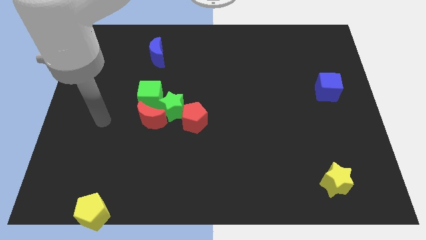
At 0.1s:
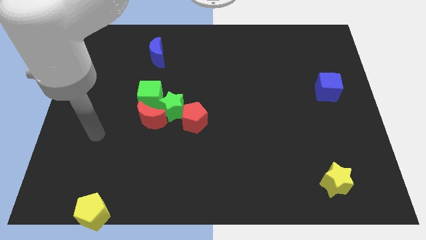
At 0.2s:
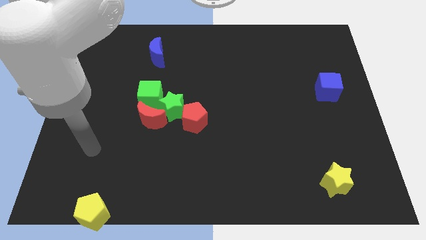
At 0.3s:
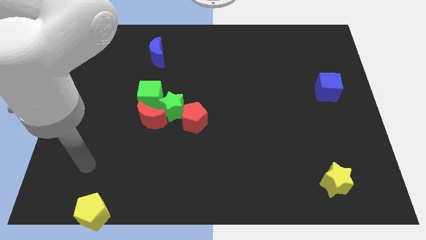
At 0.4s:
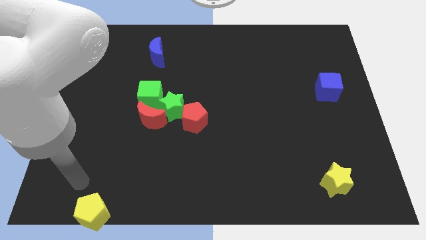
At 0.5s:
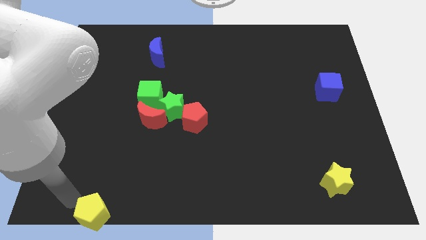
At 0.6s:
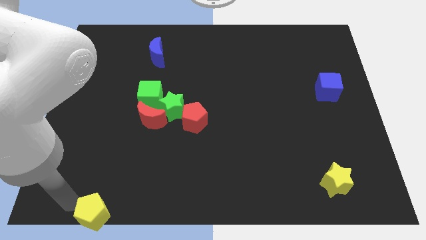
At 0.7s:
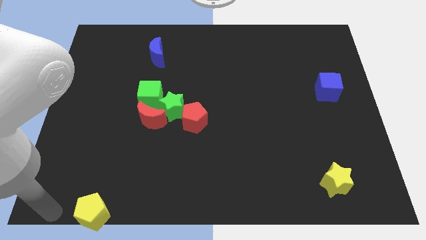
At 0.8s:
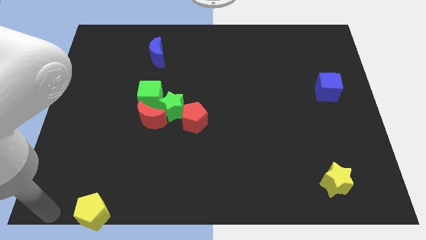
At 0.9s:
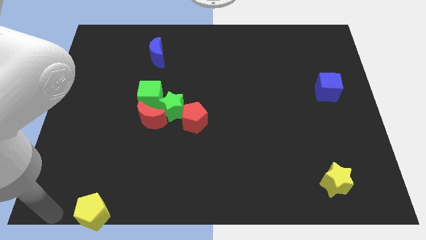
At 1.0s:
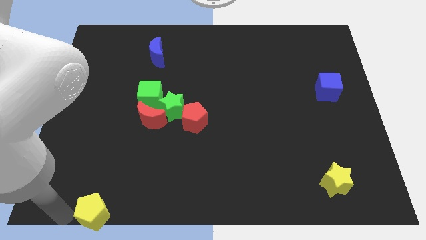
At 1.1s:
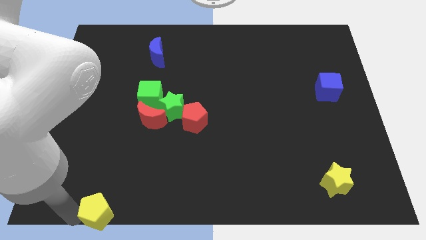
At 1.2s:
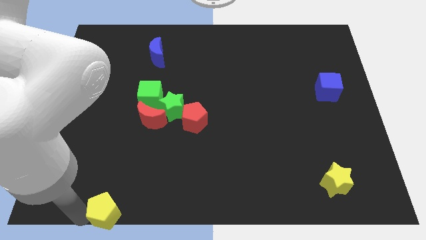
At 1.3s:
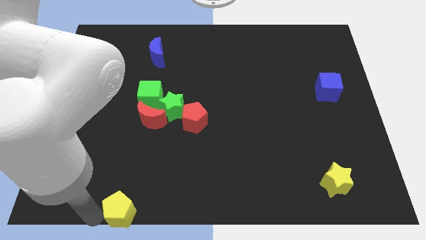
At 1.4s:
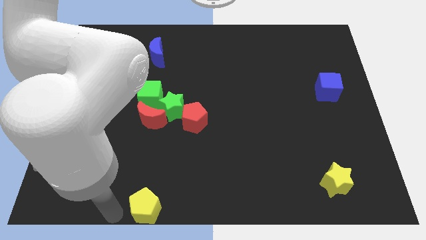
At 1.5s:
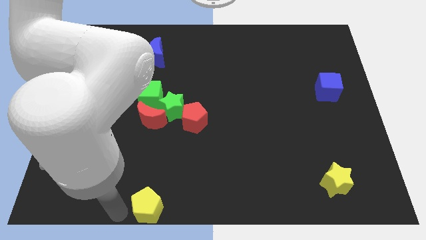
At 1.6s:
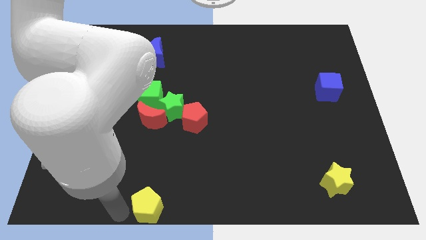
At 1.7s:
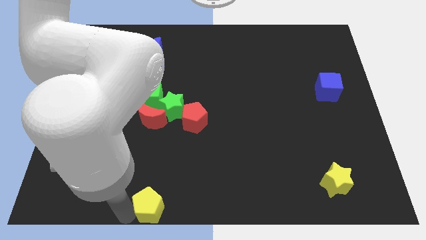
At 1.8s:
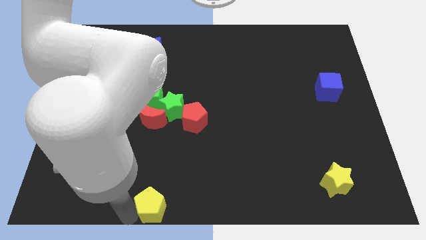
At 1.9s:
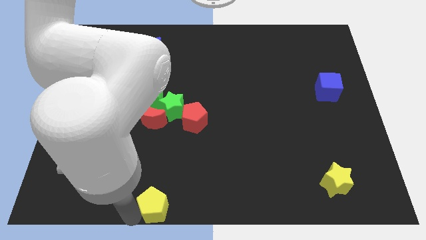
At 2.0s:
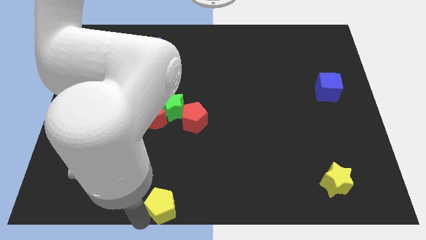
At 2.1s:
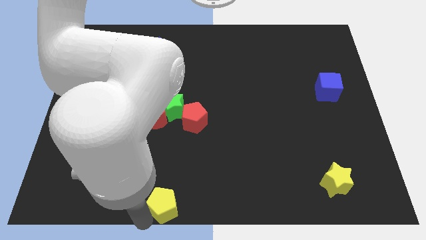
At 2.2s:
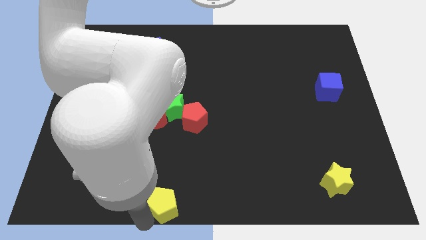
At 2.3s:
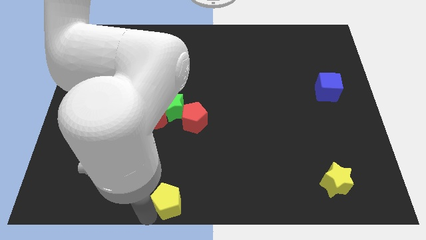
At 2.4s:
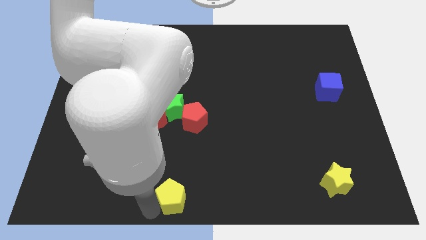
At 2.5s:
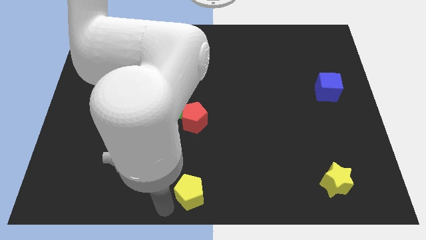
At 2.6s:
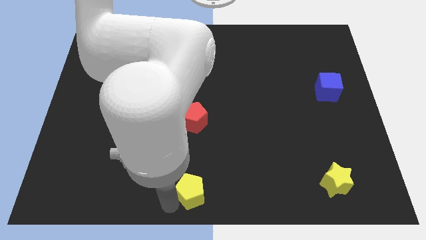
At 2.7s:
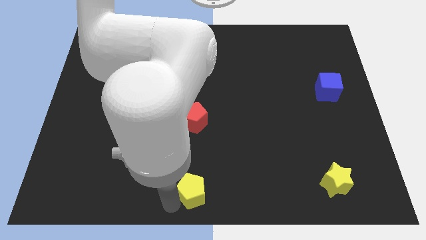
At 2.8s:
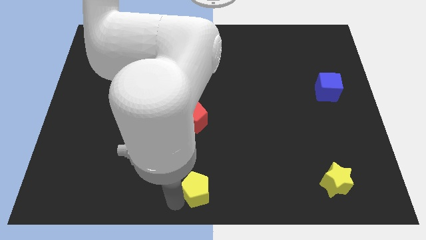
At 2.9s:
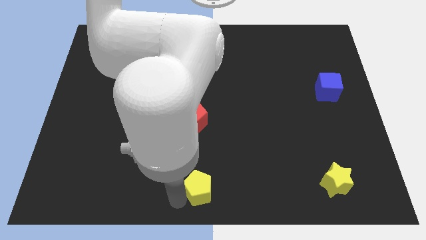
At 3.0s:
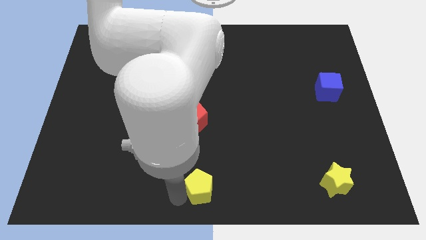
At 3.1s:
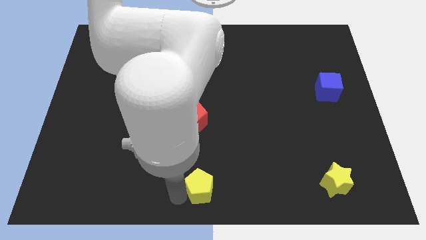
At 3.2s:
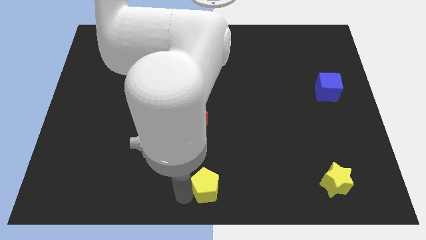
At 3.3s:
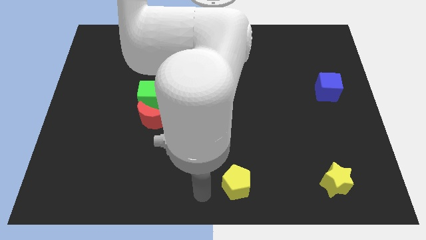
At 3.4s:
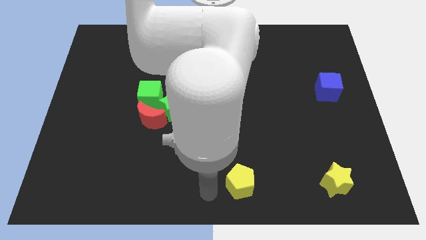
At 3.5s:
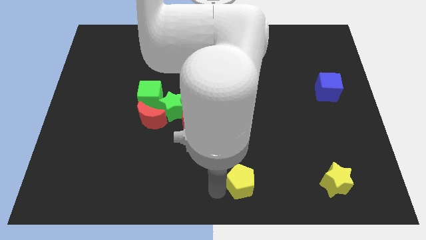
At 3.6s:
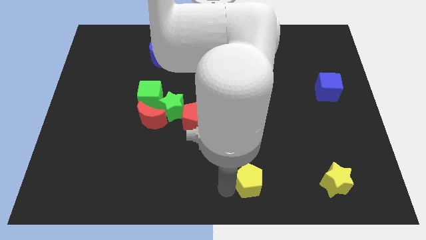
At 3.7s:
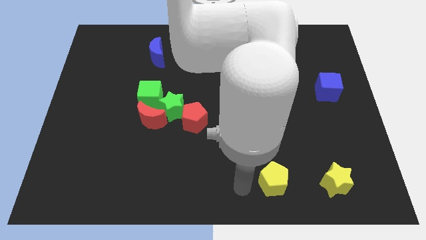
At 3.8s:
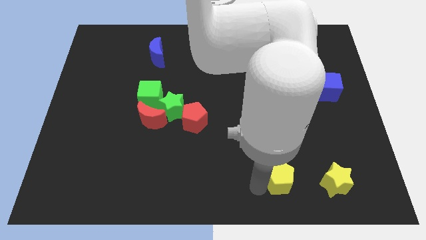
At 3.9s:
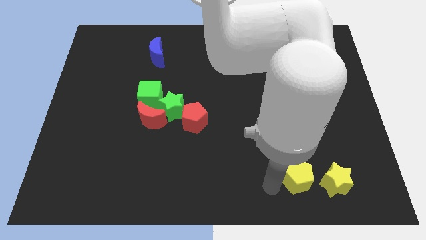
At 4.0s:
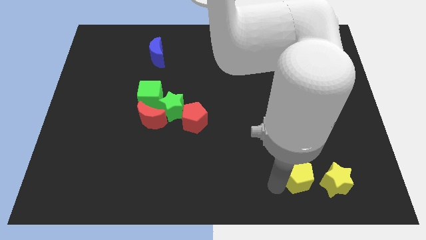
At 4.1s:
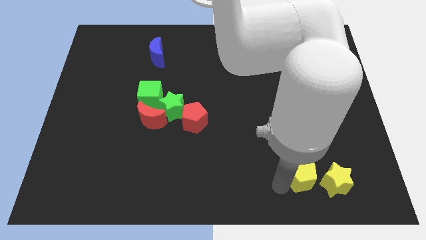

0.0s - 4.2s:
move the yellow pentagon towards the bottom right side of the board

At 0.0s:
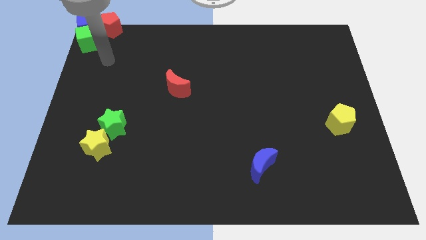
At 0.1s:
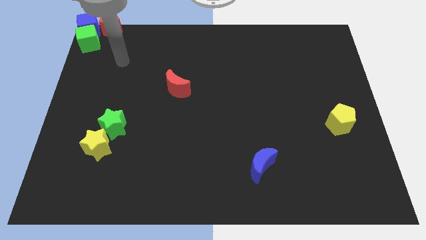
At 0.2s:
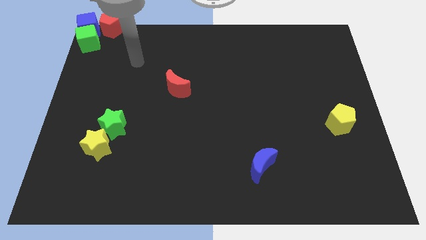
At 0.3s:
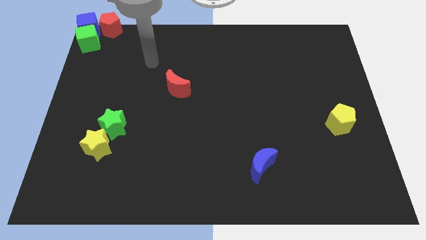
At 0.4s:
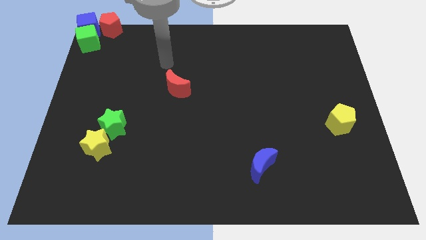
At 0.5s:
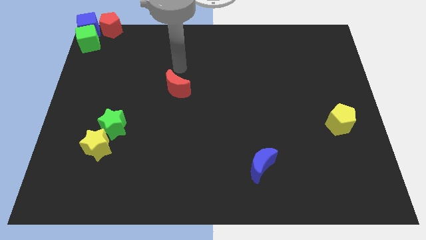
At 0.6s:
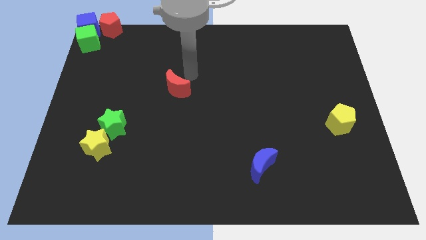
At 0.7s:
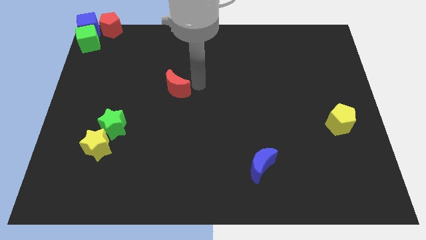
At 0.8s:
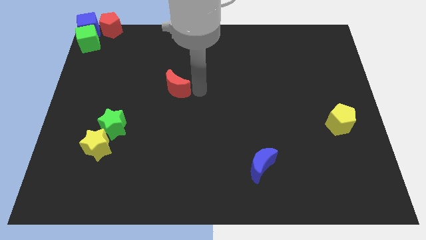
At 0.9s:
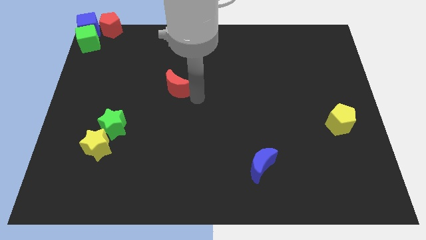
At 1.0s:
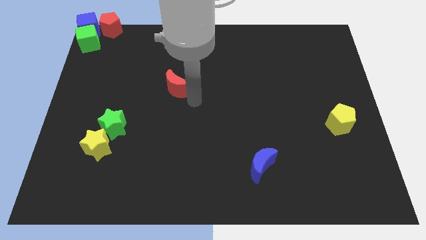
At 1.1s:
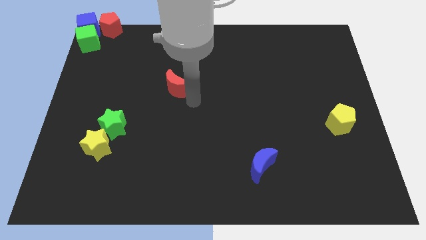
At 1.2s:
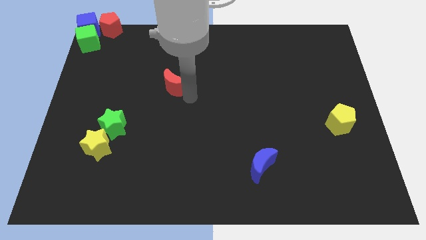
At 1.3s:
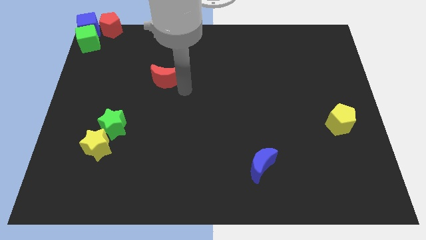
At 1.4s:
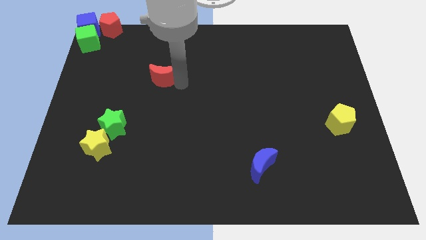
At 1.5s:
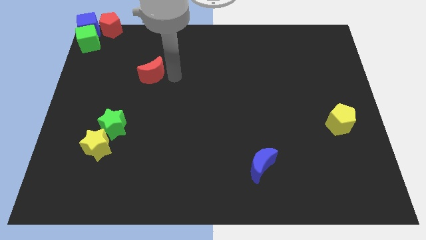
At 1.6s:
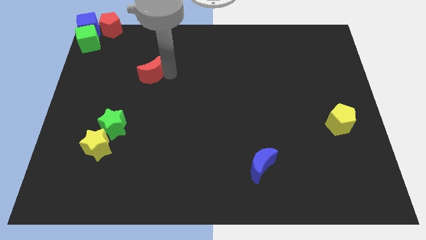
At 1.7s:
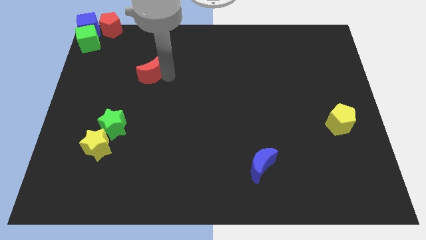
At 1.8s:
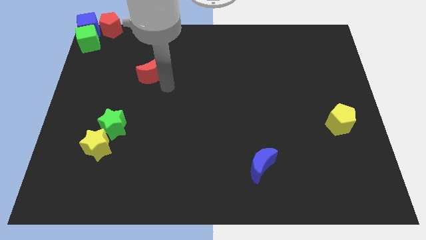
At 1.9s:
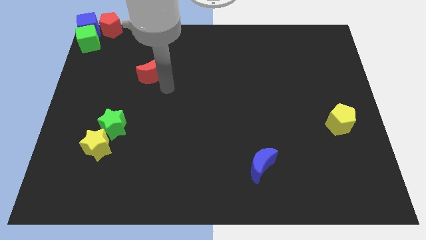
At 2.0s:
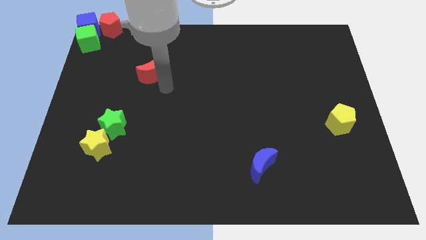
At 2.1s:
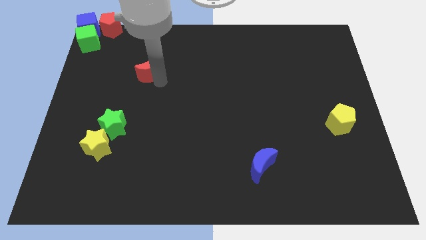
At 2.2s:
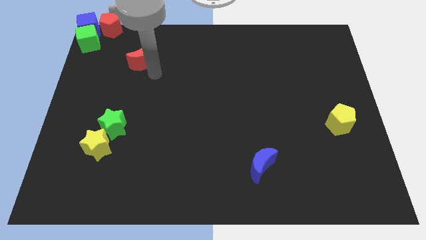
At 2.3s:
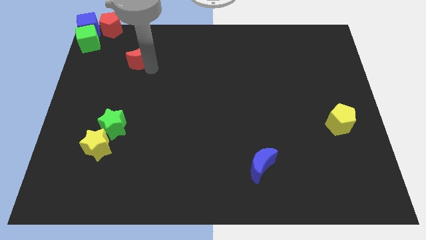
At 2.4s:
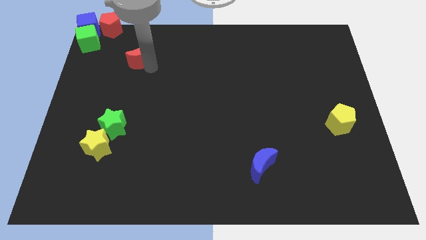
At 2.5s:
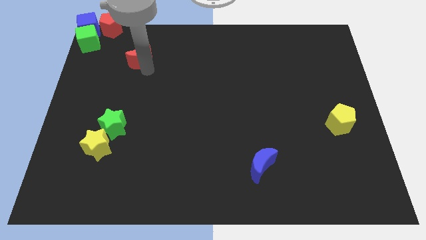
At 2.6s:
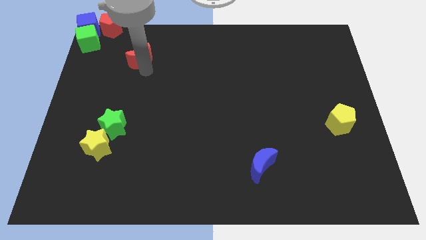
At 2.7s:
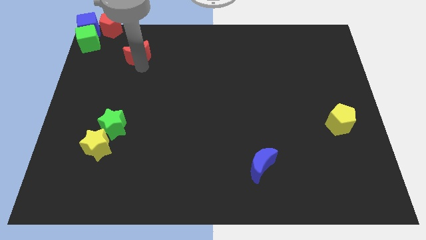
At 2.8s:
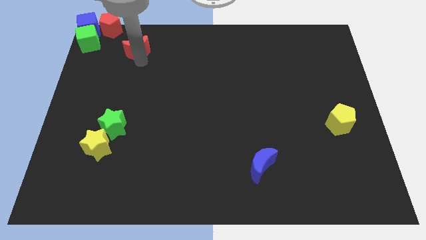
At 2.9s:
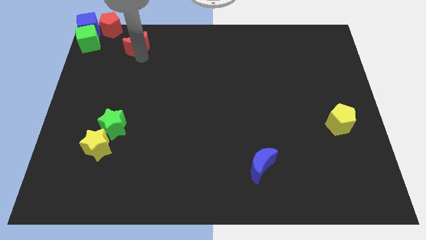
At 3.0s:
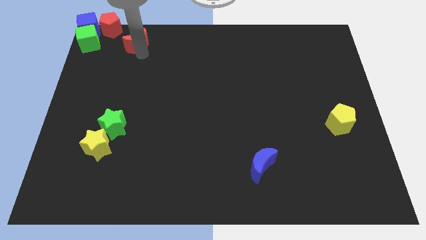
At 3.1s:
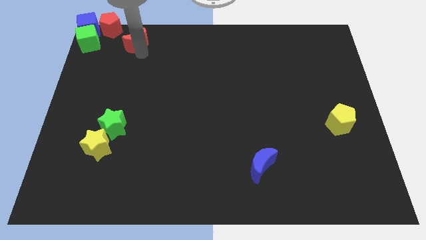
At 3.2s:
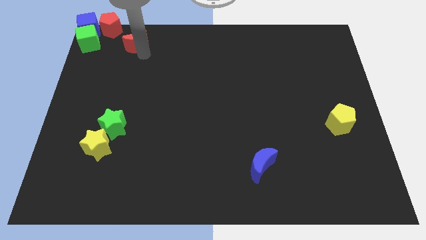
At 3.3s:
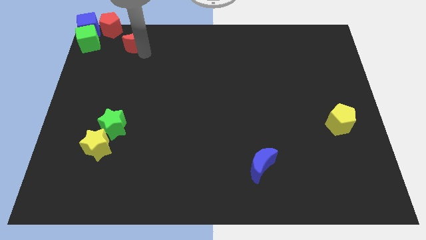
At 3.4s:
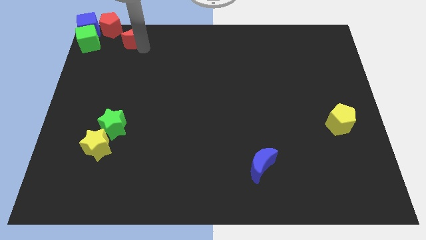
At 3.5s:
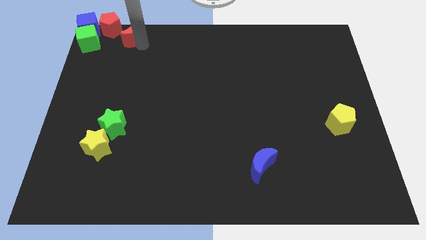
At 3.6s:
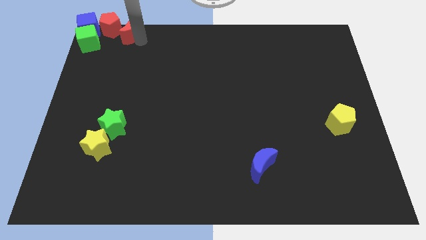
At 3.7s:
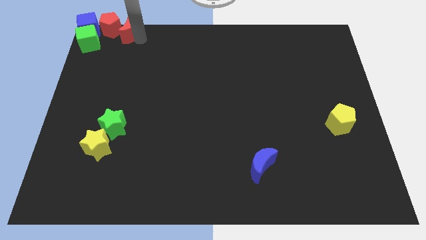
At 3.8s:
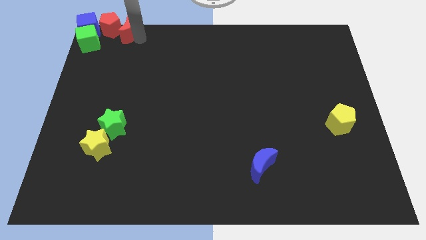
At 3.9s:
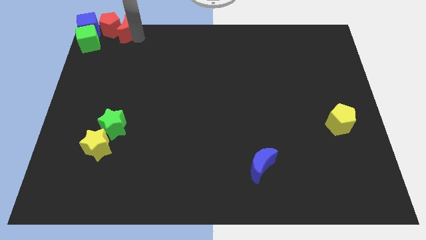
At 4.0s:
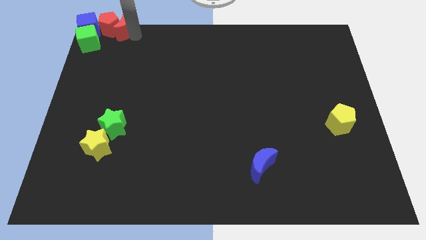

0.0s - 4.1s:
place the red crescent right of red pentagon

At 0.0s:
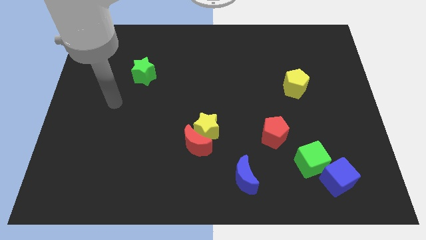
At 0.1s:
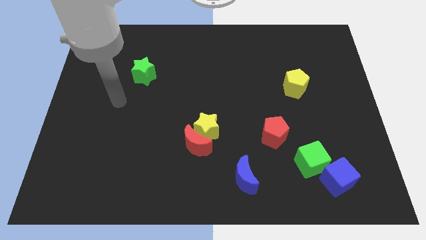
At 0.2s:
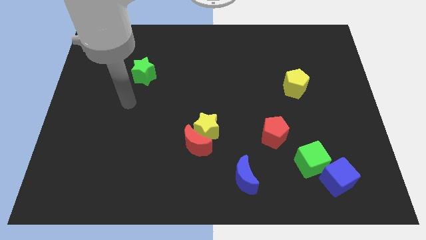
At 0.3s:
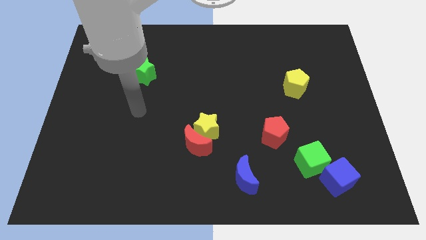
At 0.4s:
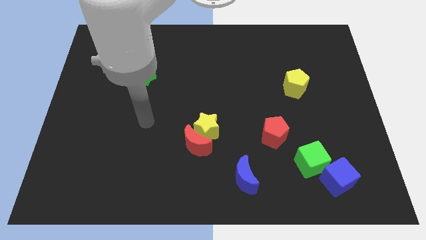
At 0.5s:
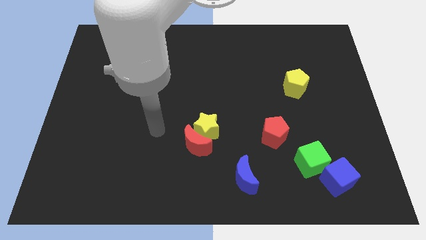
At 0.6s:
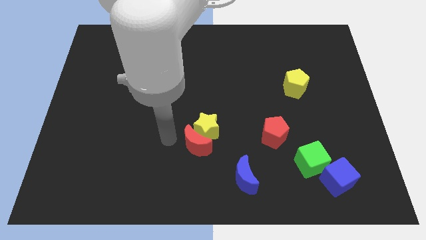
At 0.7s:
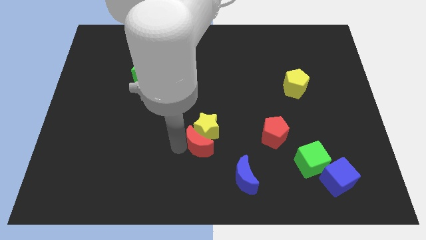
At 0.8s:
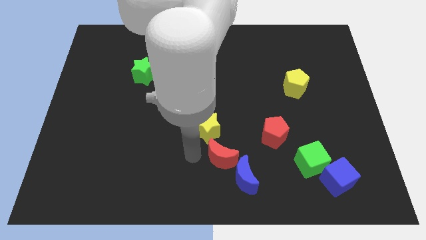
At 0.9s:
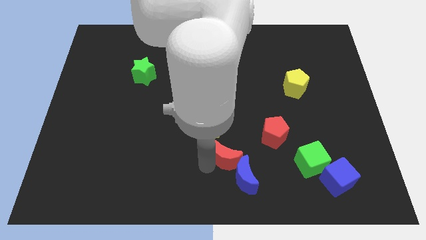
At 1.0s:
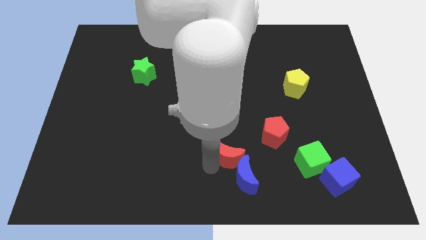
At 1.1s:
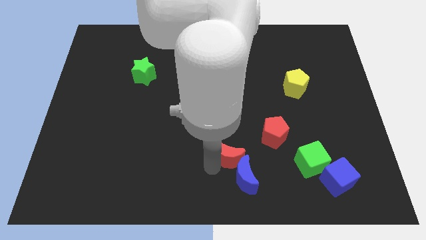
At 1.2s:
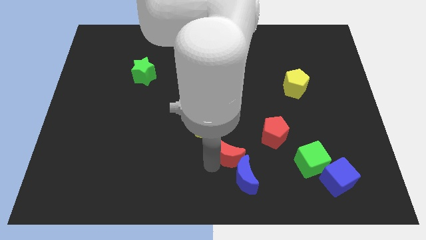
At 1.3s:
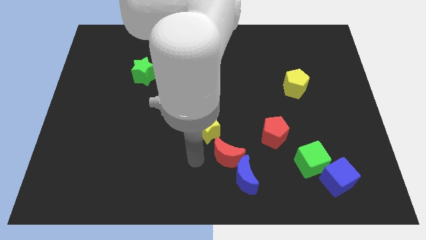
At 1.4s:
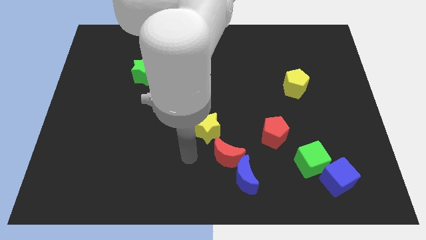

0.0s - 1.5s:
place the red crescent in between the blue crescent and yellow star
